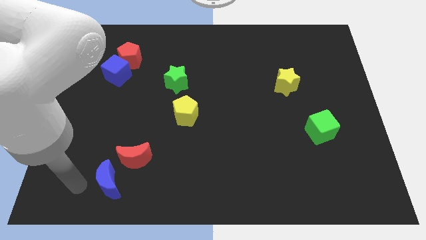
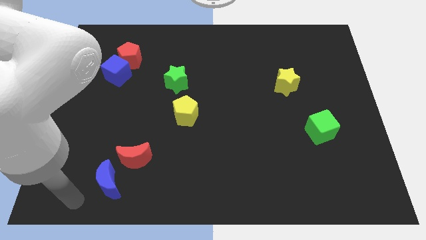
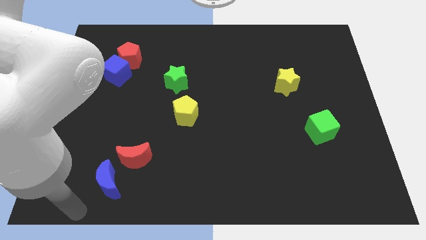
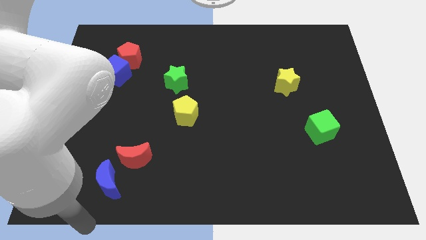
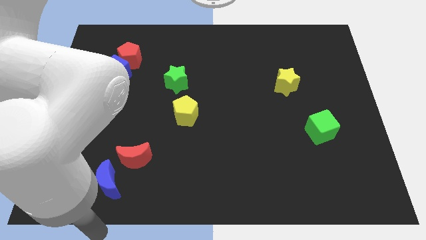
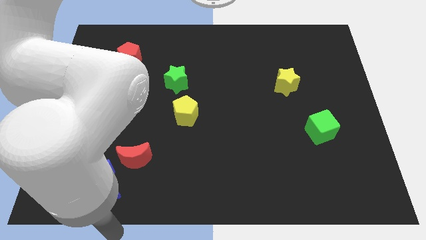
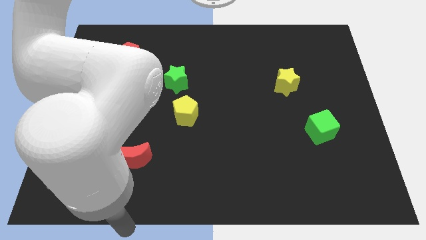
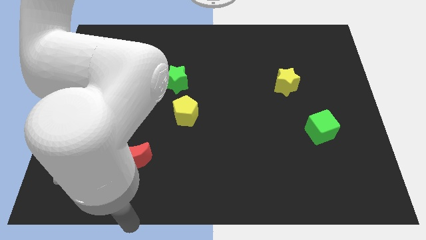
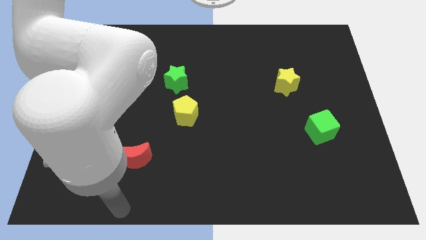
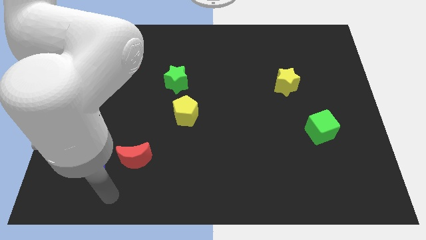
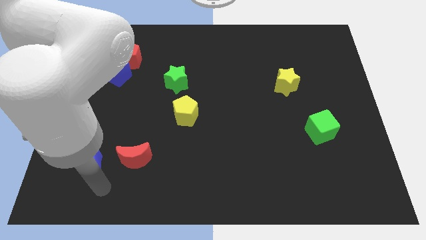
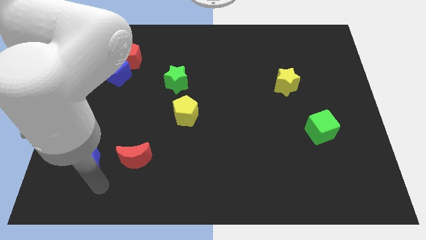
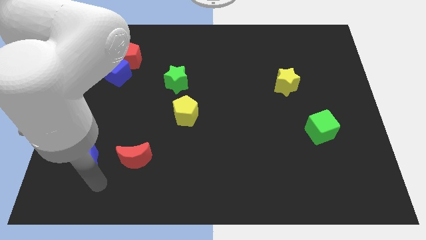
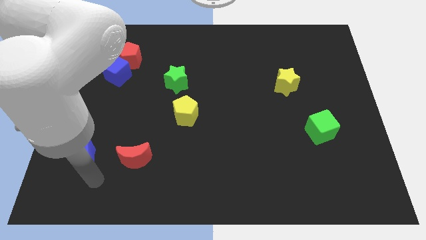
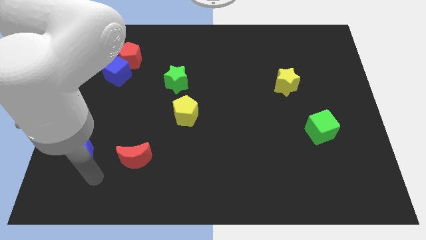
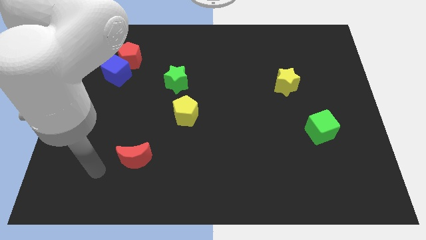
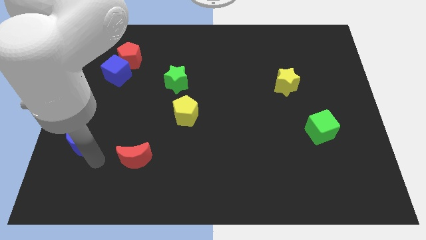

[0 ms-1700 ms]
push the blue moon to the left of the red moon

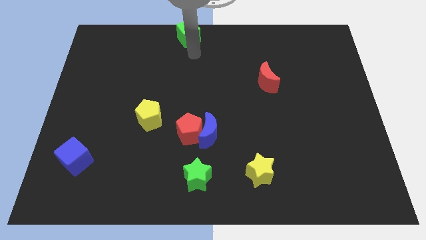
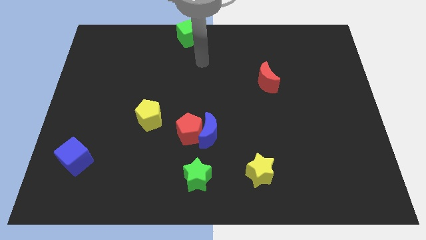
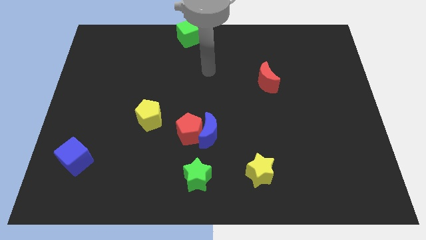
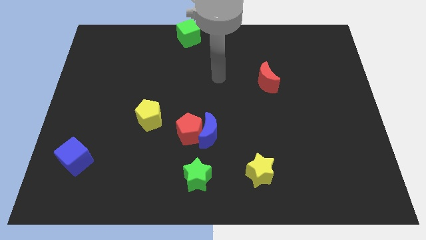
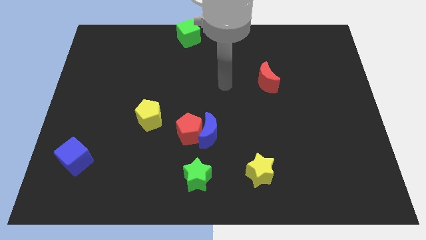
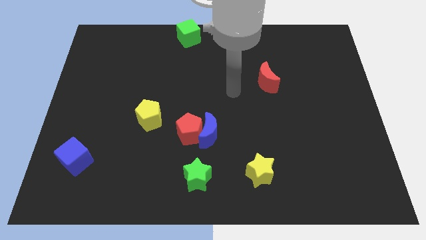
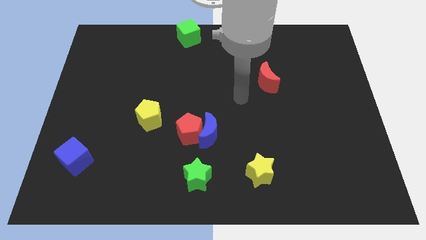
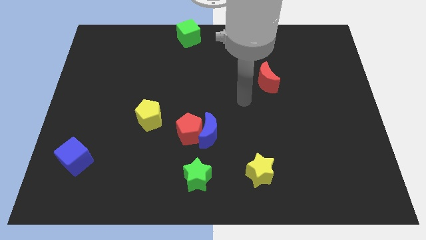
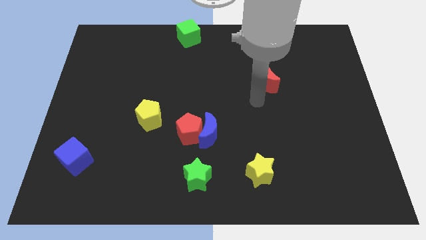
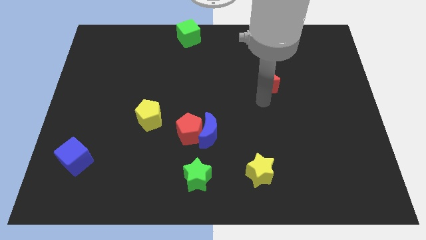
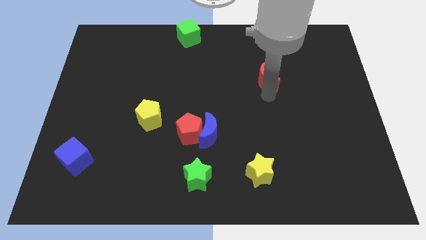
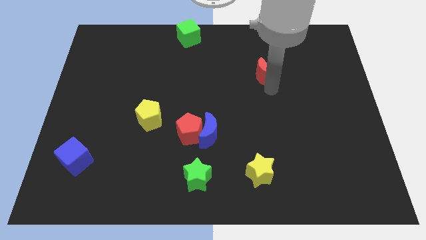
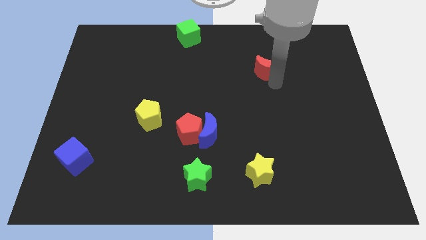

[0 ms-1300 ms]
touch the bottom side of the red moon

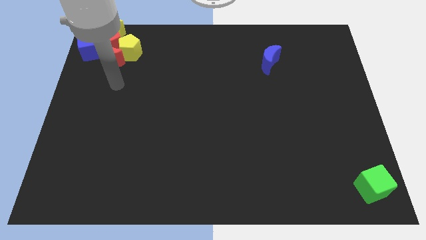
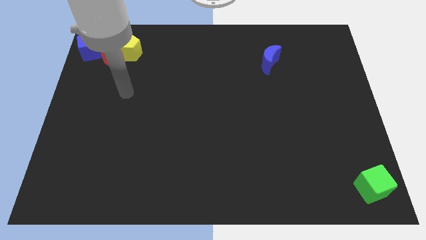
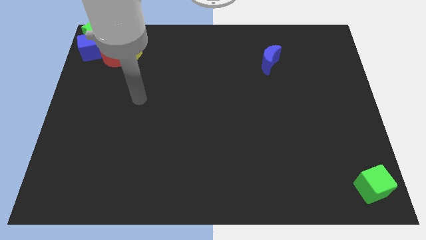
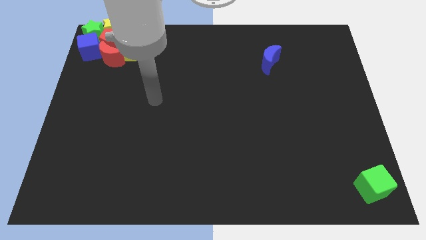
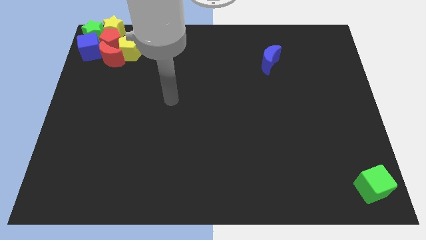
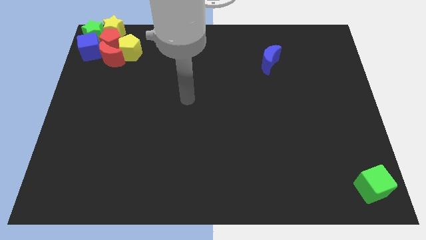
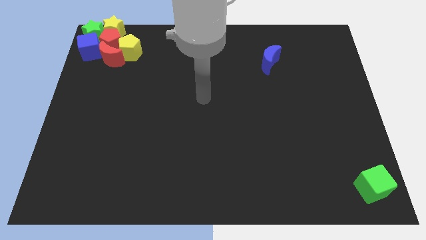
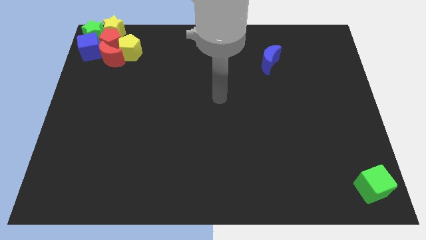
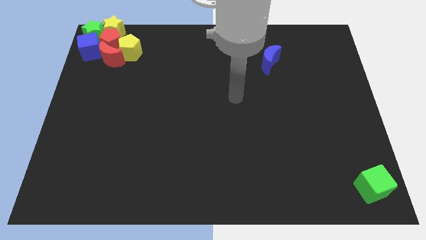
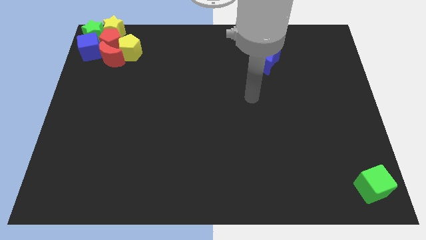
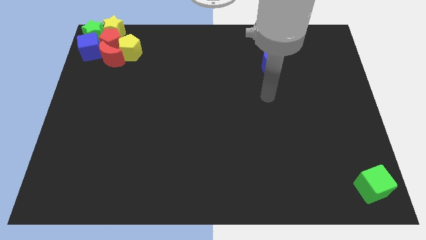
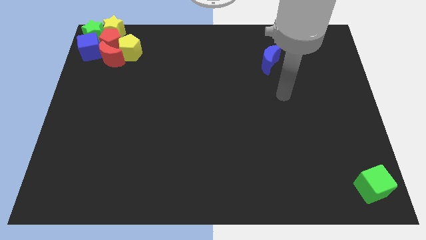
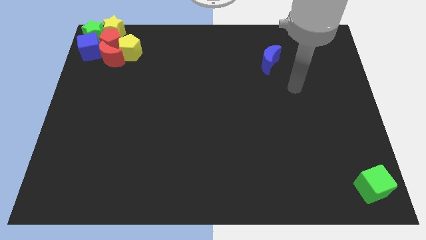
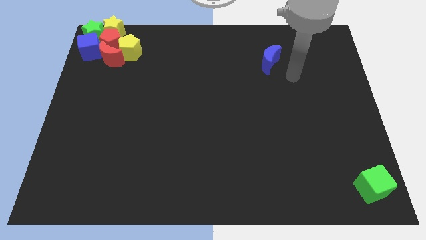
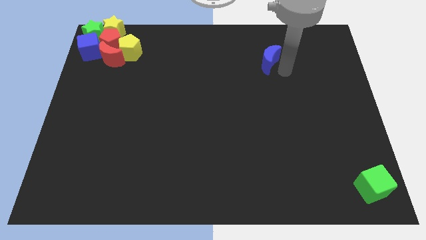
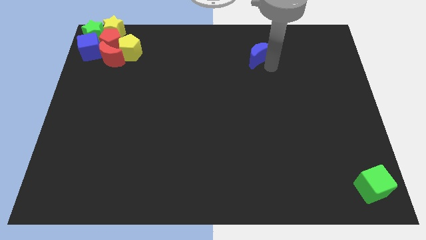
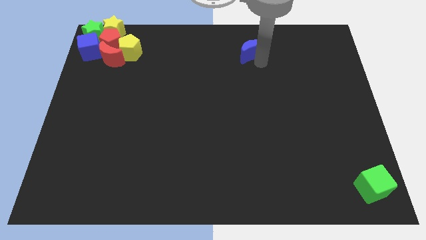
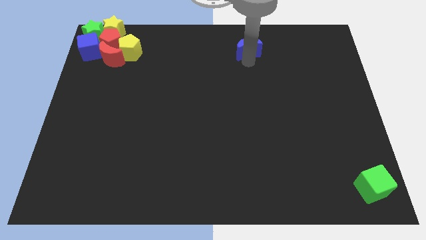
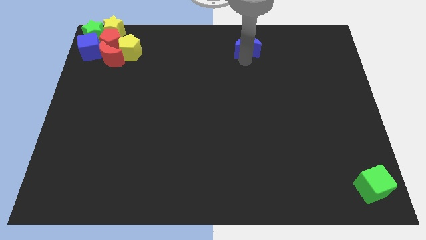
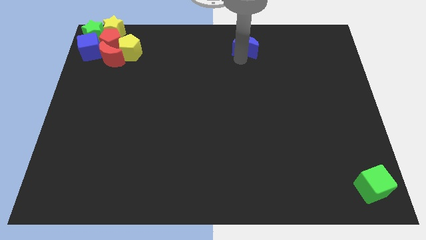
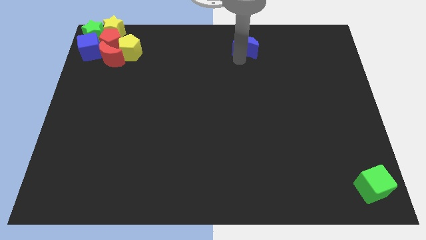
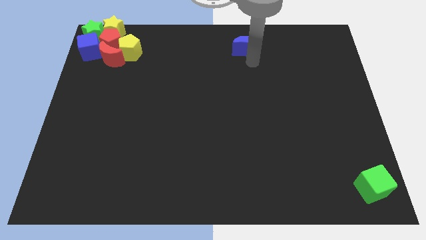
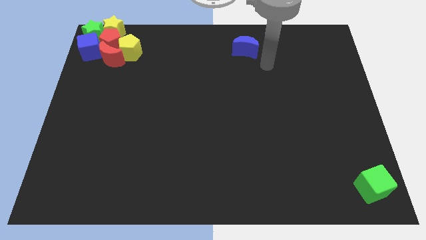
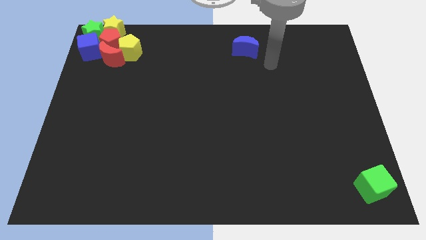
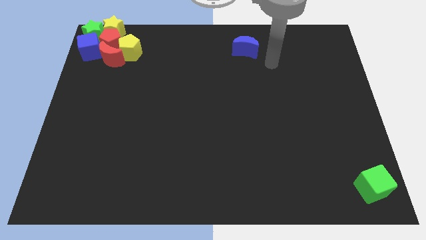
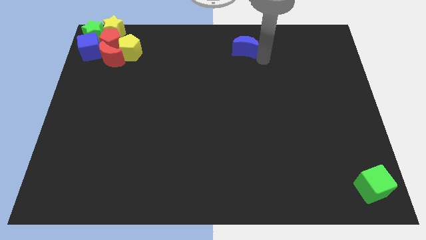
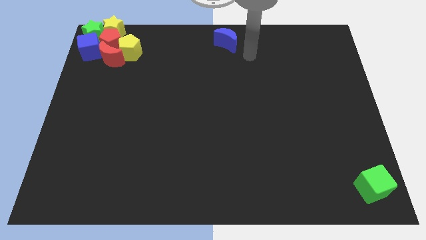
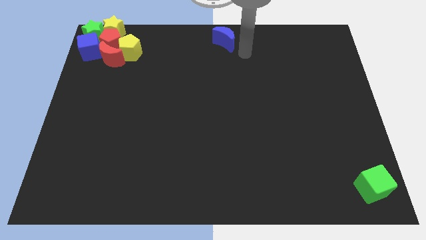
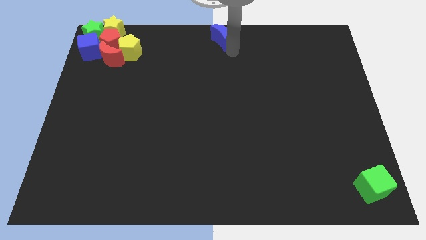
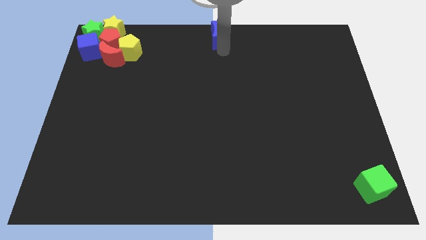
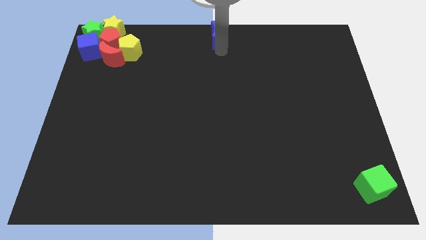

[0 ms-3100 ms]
slide the blue moon to the top center of the board

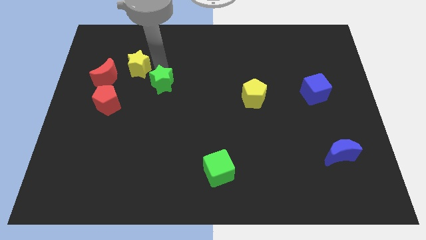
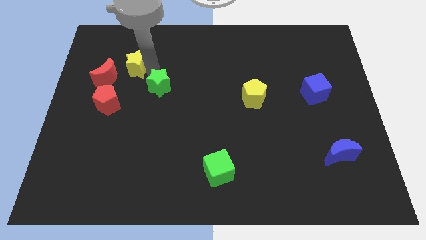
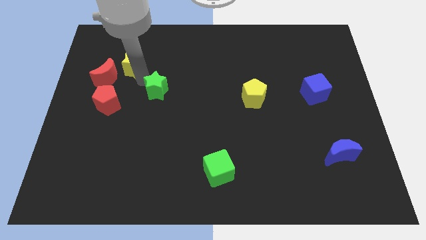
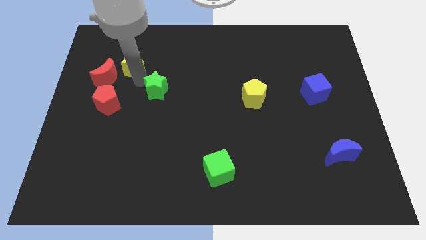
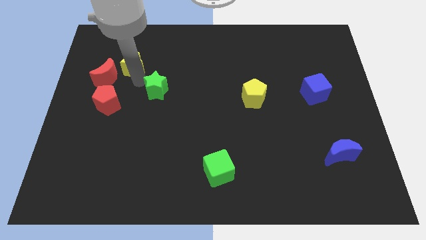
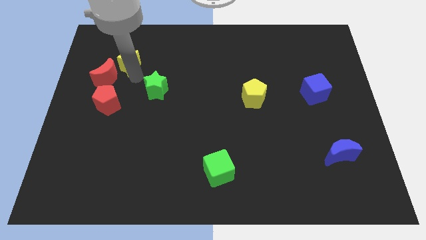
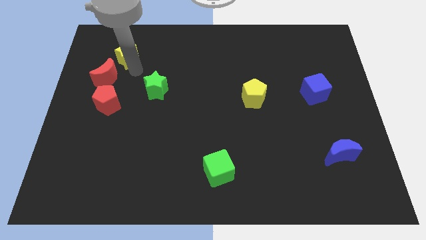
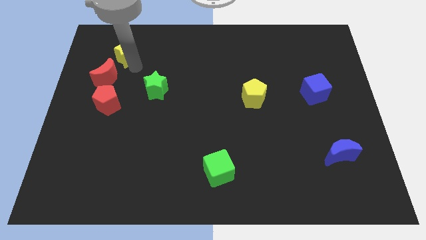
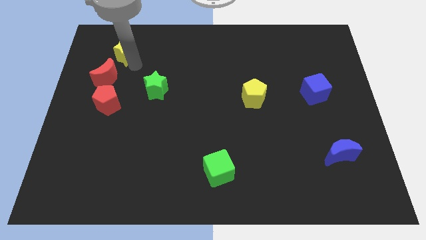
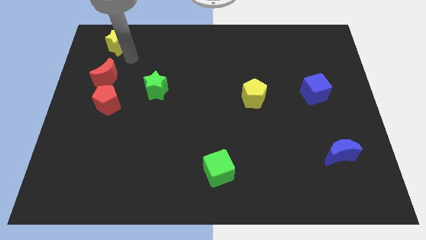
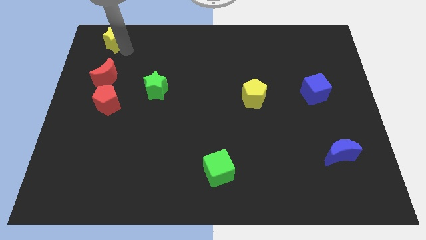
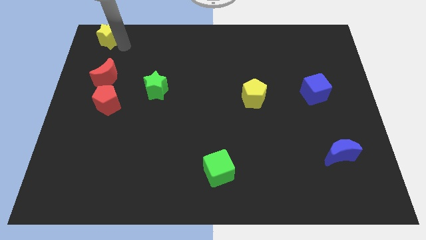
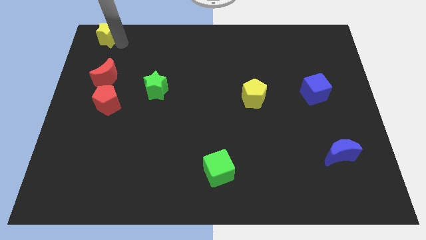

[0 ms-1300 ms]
push the yellow star upward

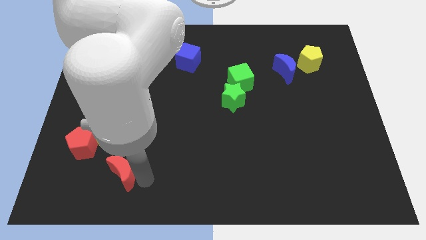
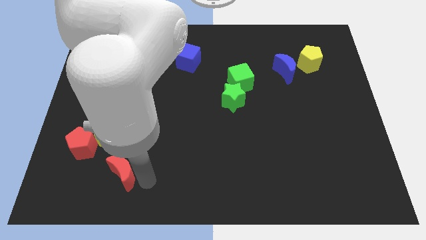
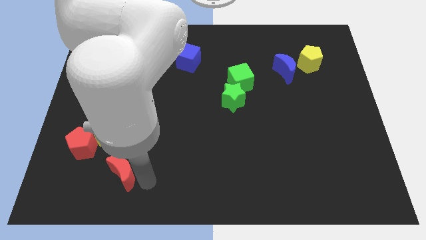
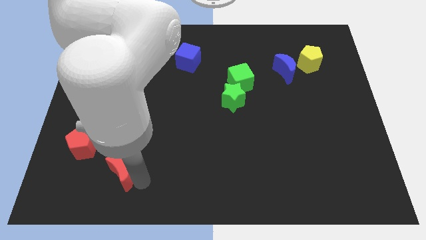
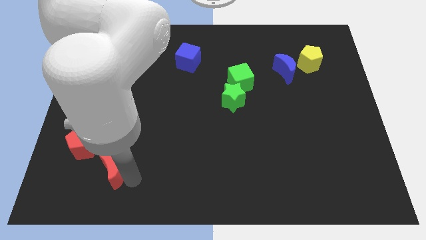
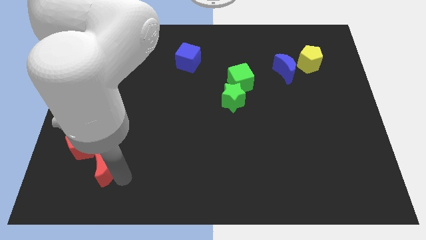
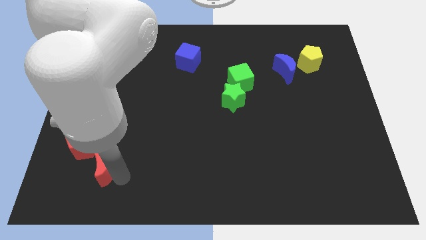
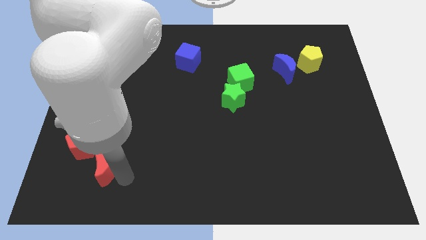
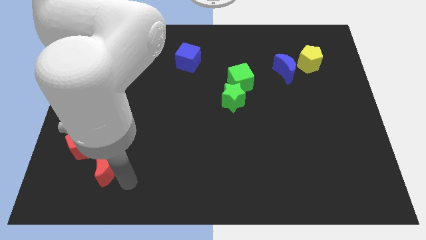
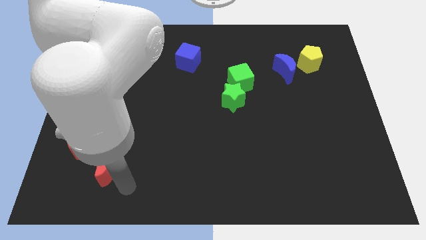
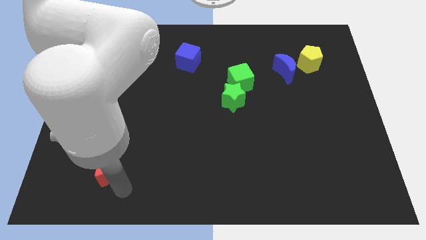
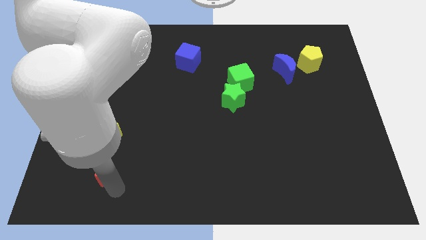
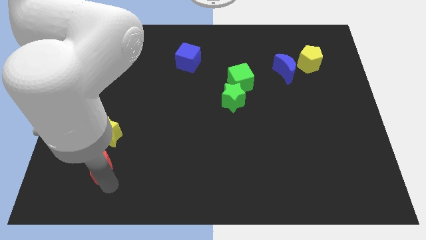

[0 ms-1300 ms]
move the red crescent slightly to the left side of the board

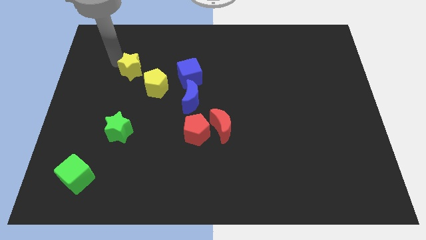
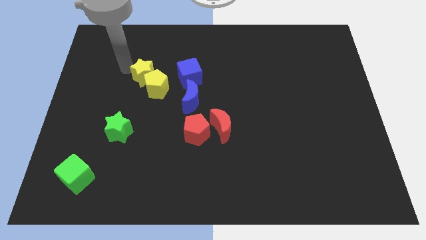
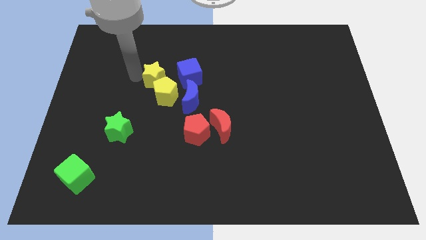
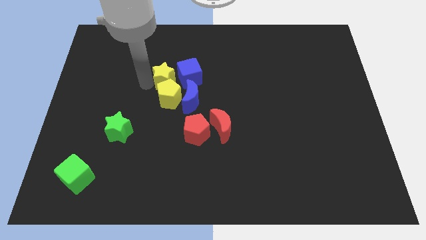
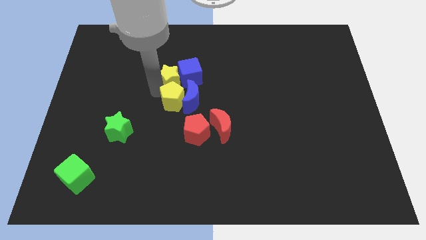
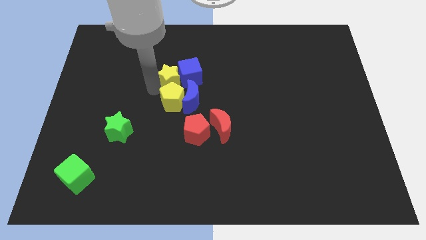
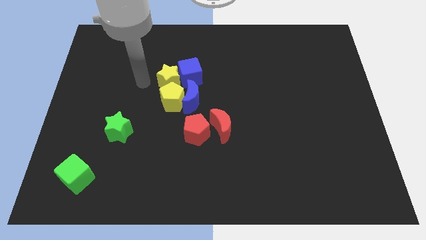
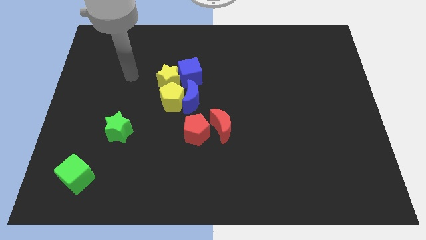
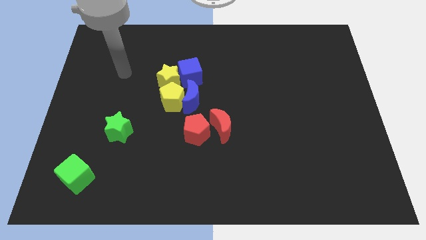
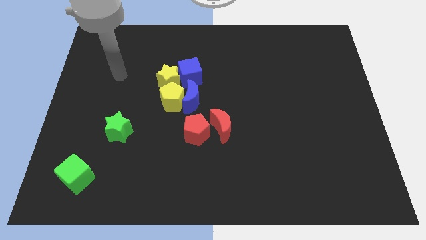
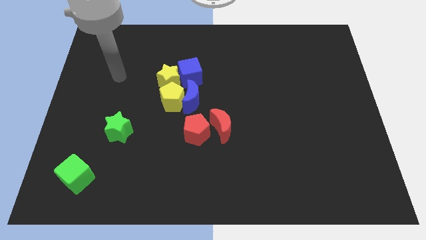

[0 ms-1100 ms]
place yellow star above yellow pentagon
